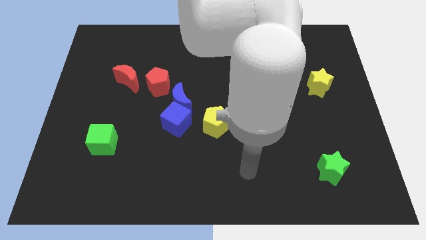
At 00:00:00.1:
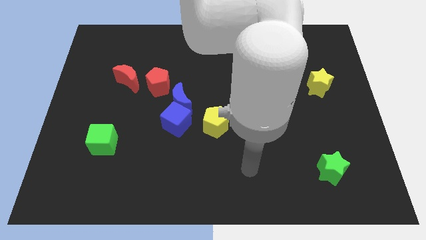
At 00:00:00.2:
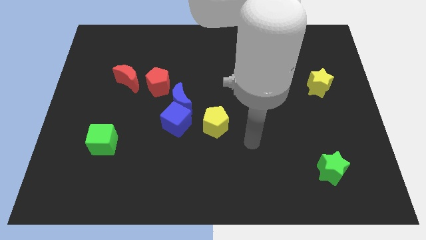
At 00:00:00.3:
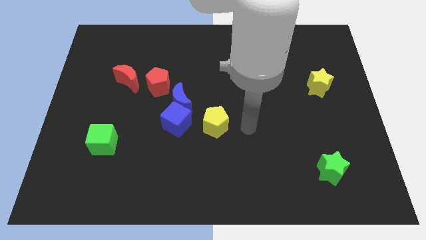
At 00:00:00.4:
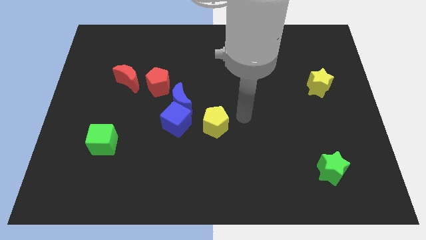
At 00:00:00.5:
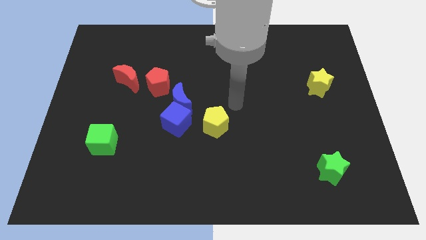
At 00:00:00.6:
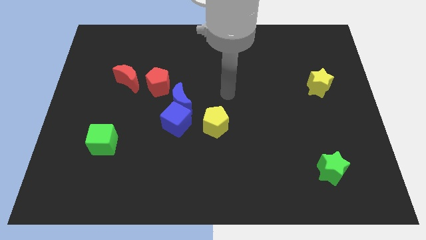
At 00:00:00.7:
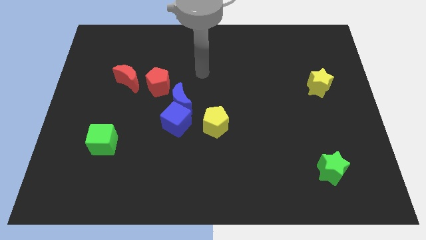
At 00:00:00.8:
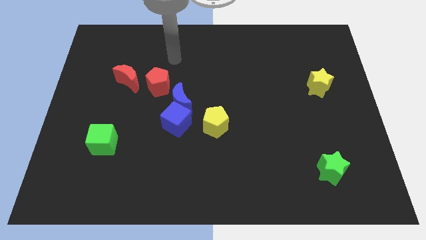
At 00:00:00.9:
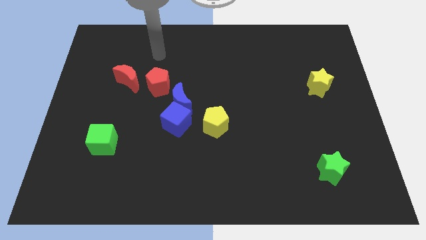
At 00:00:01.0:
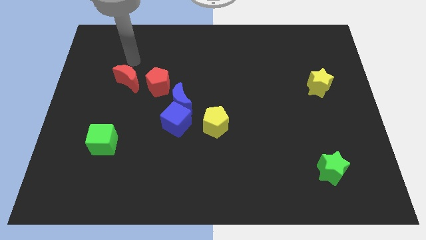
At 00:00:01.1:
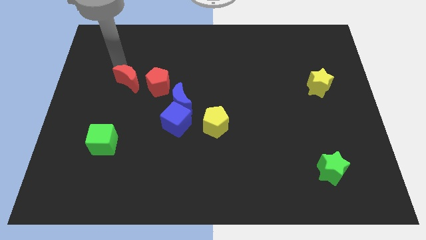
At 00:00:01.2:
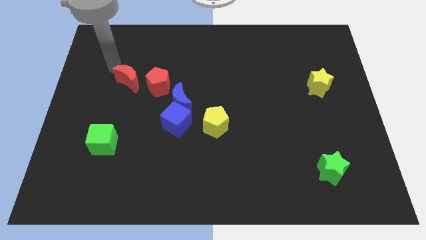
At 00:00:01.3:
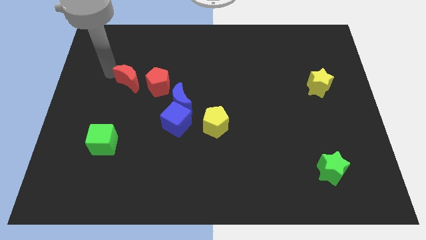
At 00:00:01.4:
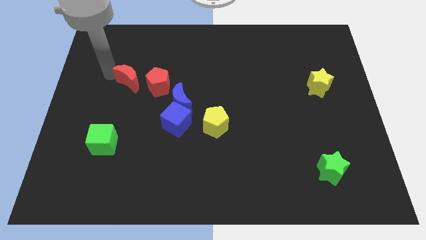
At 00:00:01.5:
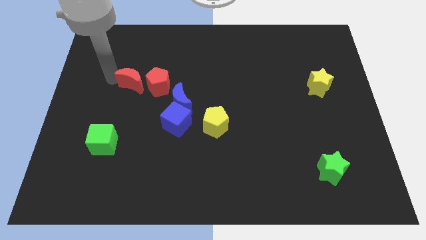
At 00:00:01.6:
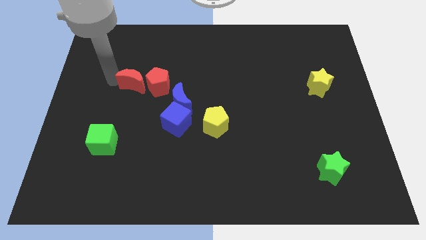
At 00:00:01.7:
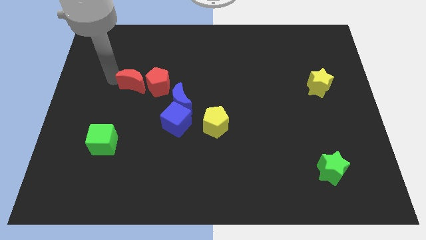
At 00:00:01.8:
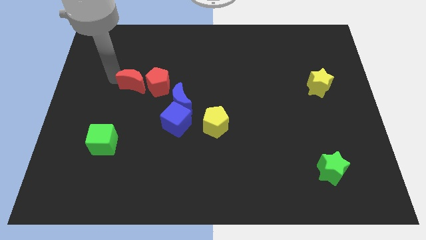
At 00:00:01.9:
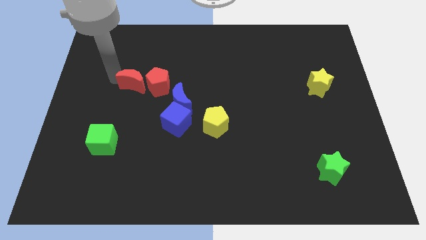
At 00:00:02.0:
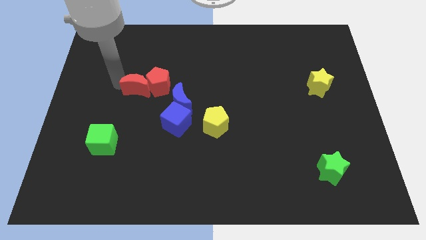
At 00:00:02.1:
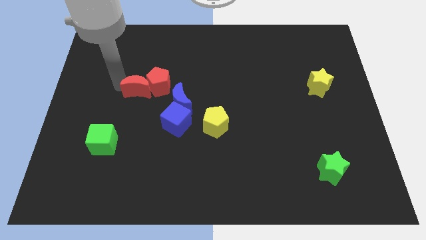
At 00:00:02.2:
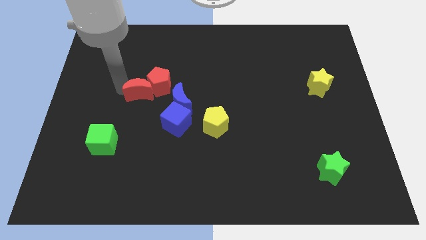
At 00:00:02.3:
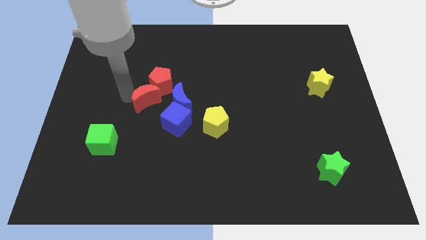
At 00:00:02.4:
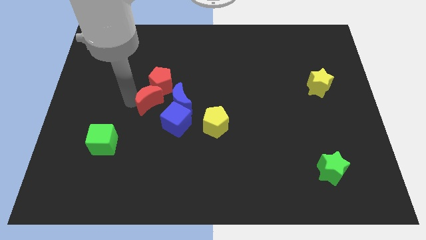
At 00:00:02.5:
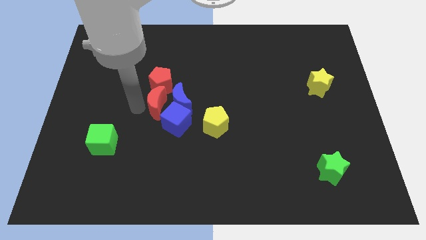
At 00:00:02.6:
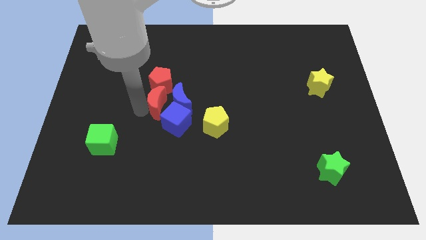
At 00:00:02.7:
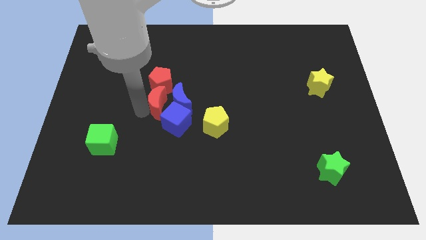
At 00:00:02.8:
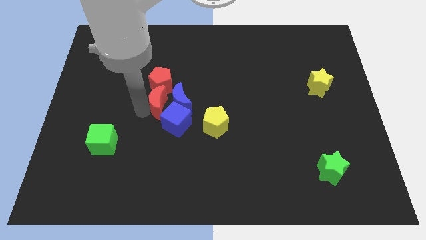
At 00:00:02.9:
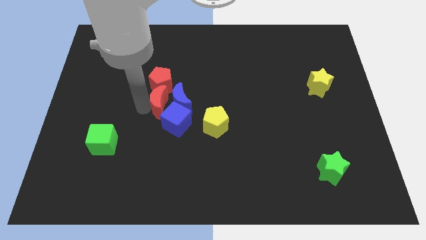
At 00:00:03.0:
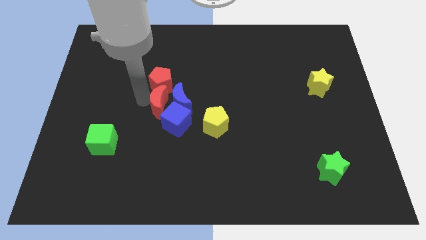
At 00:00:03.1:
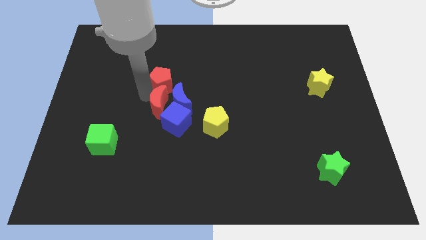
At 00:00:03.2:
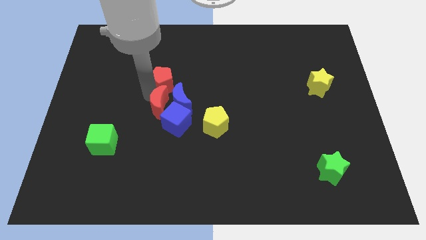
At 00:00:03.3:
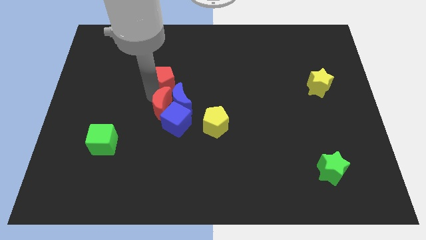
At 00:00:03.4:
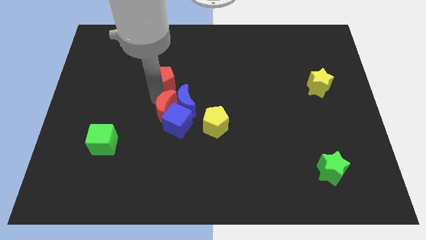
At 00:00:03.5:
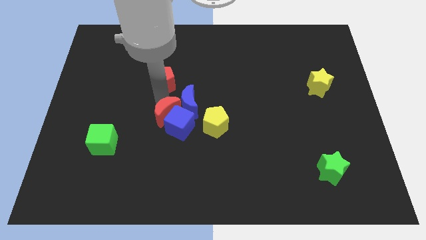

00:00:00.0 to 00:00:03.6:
push the red moon next to the blue cube

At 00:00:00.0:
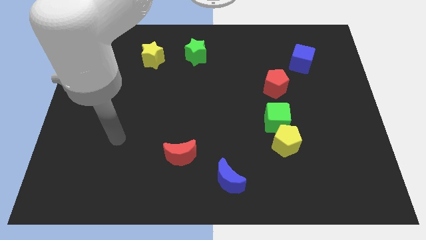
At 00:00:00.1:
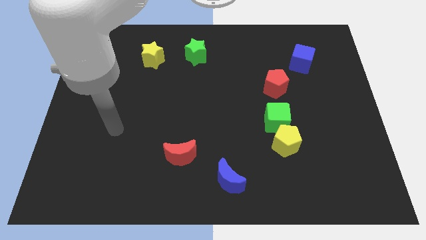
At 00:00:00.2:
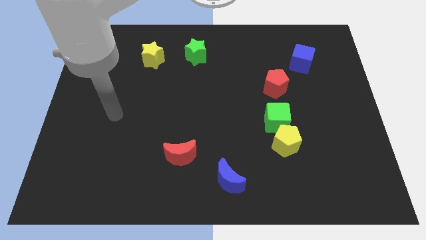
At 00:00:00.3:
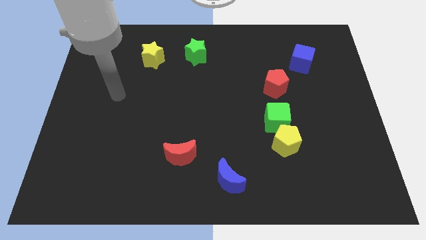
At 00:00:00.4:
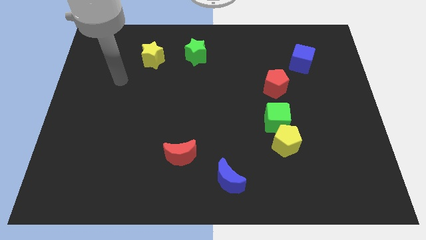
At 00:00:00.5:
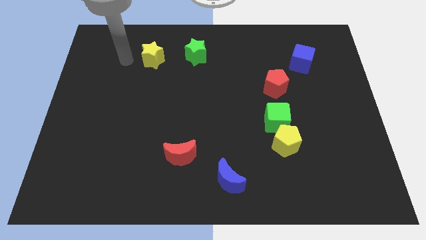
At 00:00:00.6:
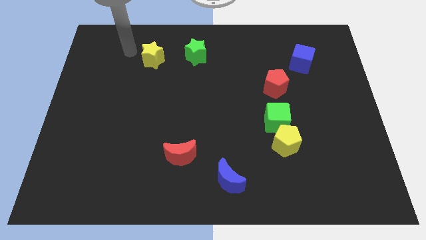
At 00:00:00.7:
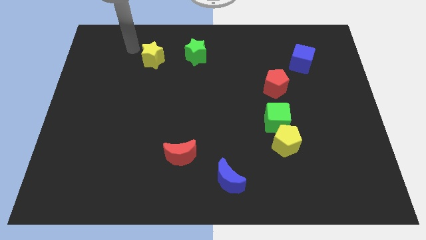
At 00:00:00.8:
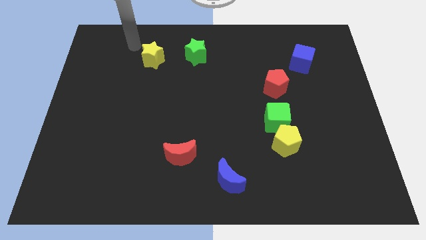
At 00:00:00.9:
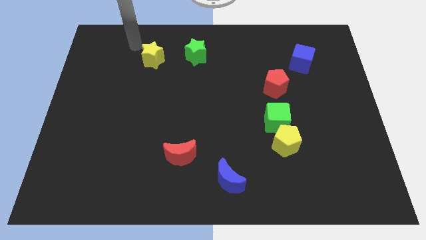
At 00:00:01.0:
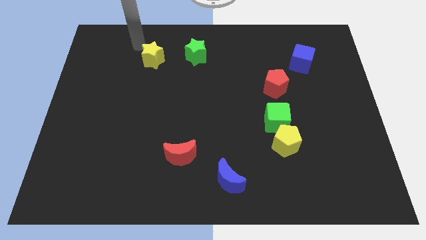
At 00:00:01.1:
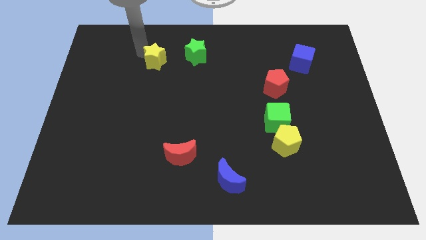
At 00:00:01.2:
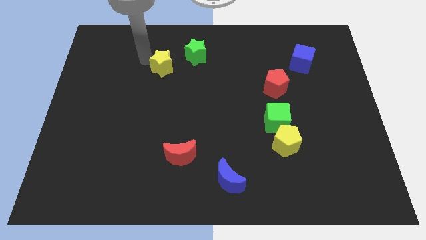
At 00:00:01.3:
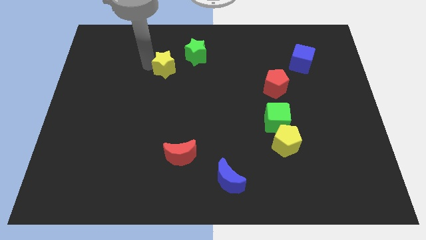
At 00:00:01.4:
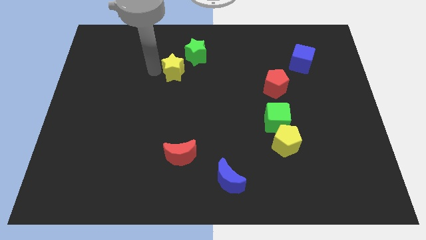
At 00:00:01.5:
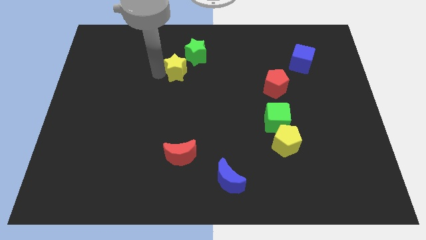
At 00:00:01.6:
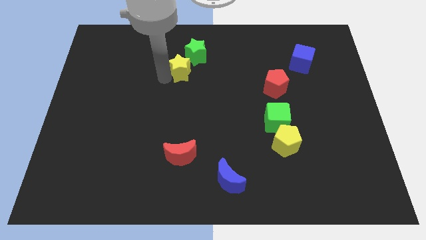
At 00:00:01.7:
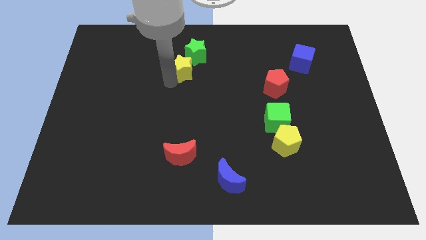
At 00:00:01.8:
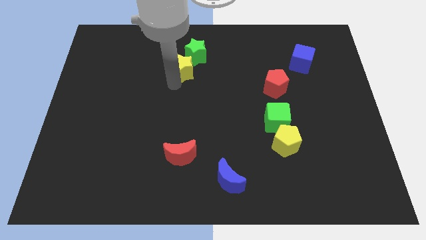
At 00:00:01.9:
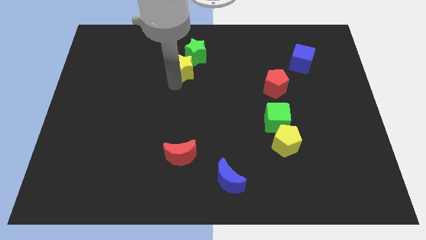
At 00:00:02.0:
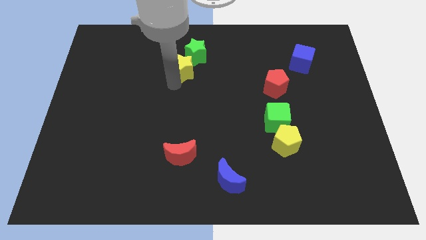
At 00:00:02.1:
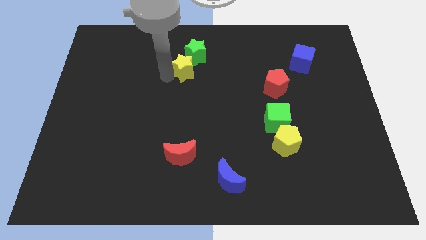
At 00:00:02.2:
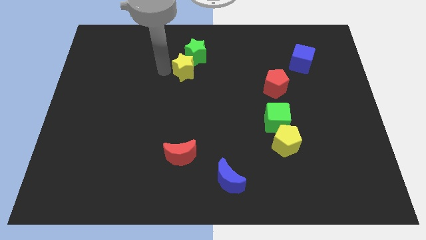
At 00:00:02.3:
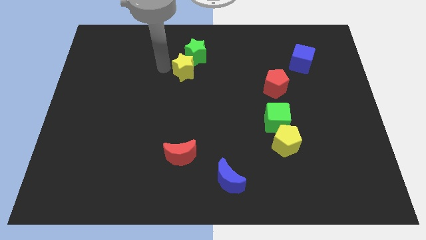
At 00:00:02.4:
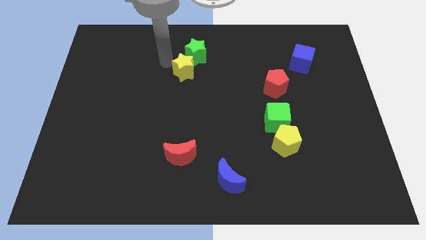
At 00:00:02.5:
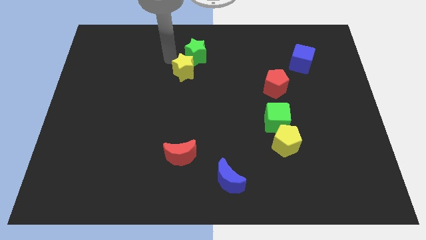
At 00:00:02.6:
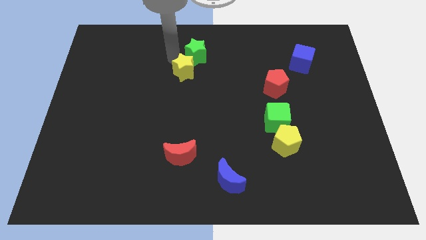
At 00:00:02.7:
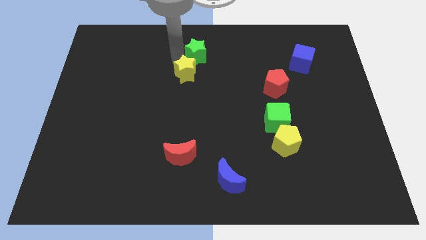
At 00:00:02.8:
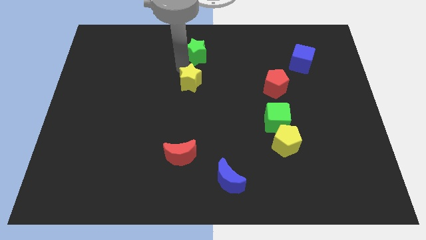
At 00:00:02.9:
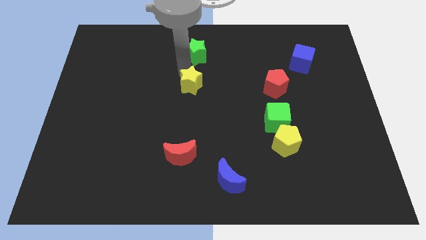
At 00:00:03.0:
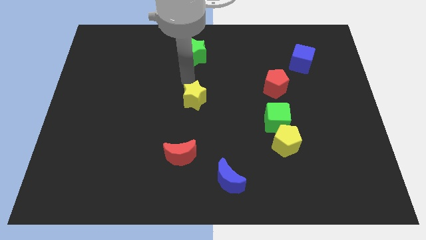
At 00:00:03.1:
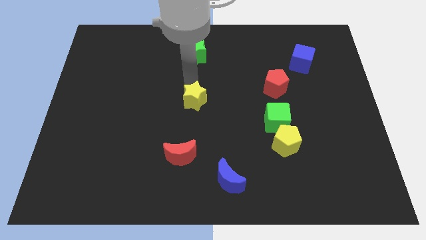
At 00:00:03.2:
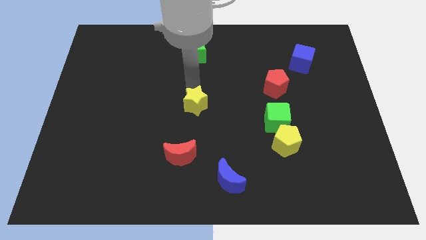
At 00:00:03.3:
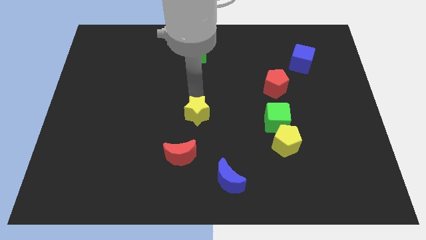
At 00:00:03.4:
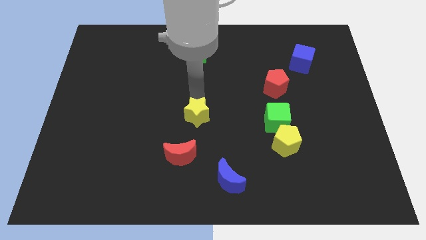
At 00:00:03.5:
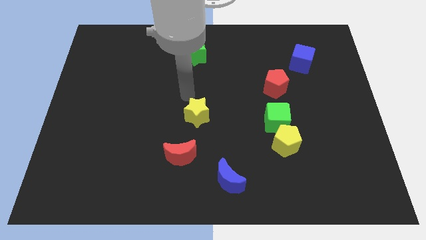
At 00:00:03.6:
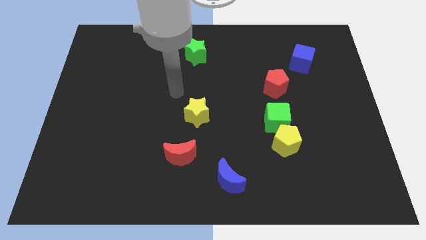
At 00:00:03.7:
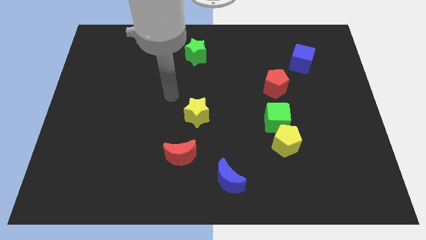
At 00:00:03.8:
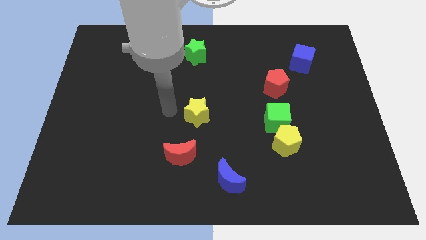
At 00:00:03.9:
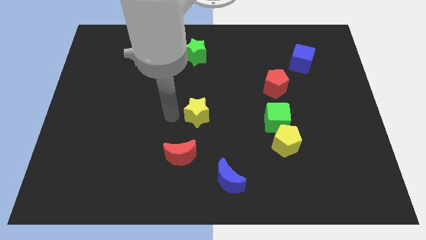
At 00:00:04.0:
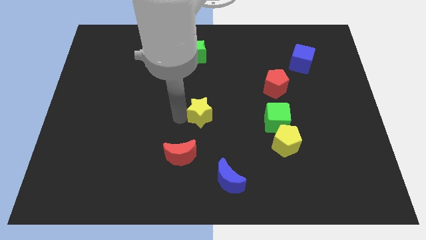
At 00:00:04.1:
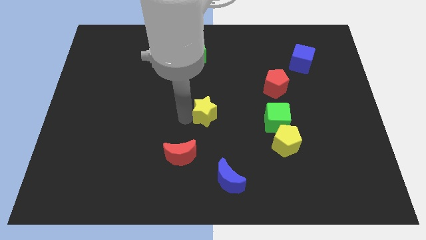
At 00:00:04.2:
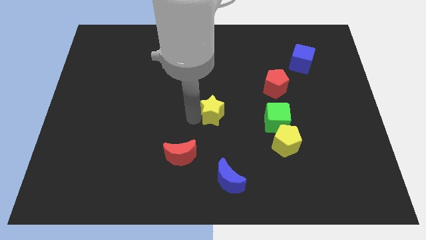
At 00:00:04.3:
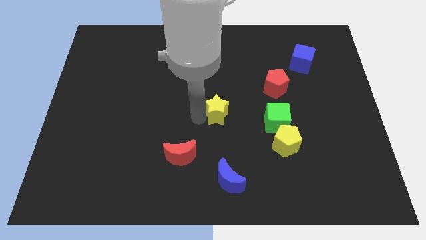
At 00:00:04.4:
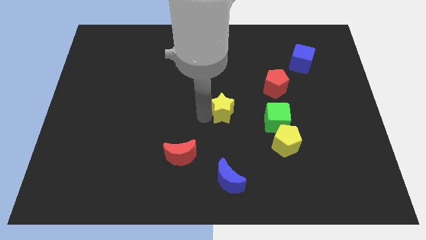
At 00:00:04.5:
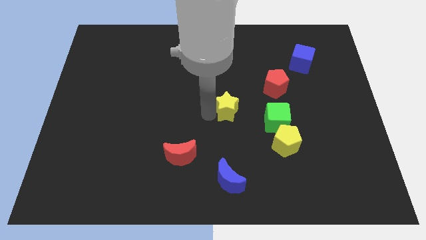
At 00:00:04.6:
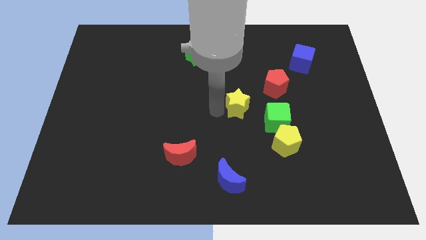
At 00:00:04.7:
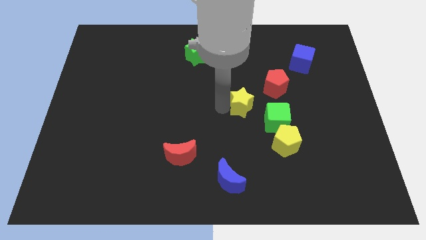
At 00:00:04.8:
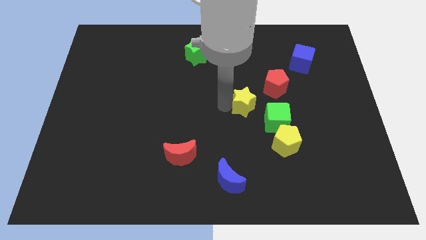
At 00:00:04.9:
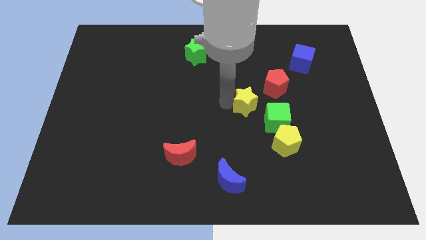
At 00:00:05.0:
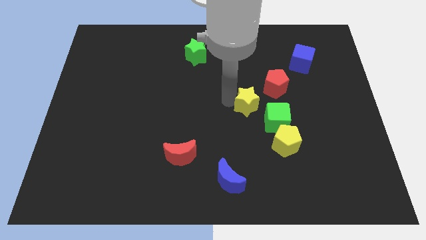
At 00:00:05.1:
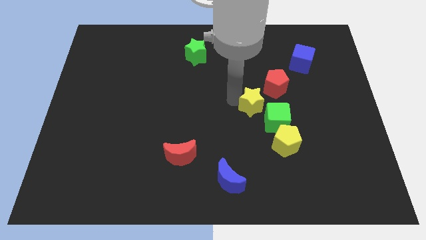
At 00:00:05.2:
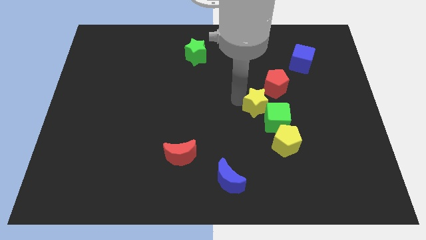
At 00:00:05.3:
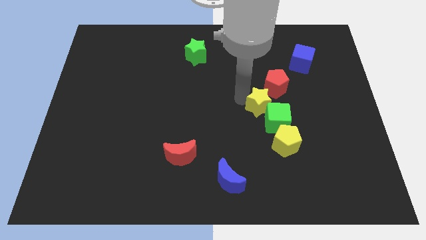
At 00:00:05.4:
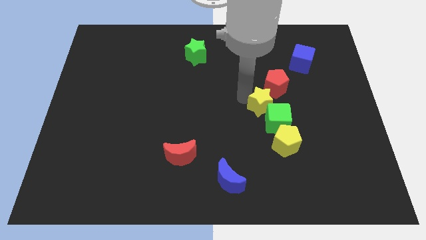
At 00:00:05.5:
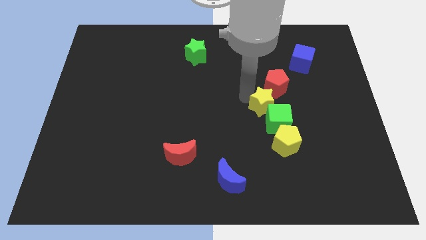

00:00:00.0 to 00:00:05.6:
slide the yellow star close to the green cube
